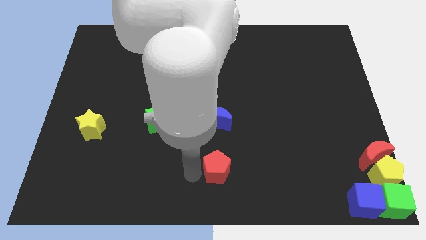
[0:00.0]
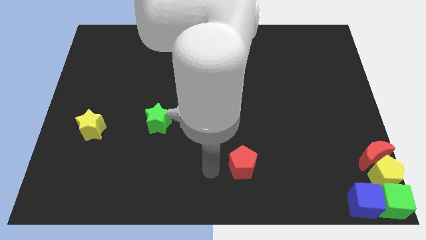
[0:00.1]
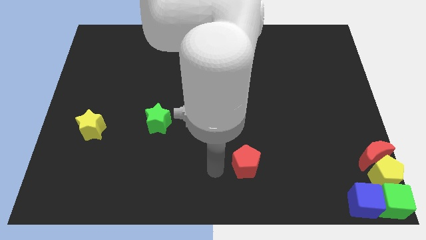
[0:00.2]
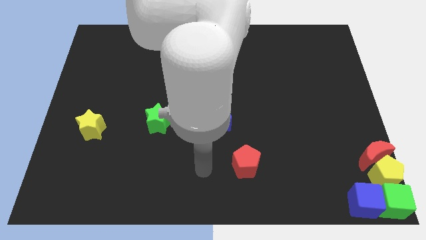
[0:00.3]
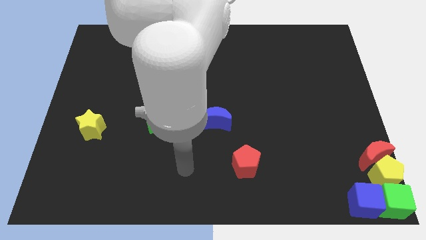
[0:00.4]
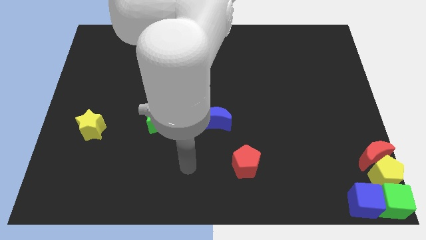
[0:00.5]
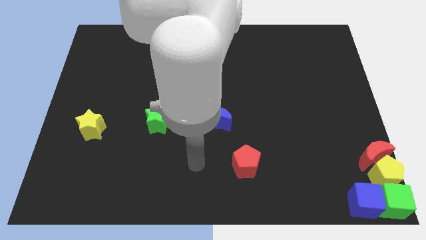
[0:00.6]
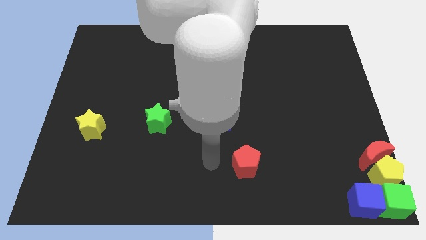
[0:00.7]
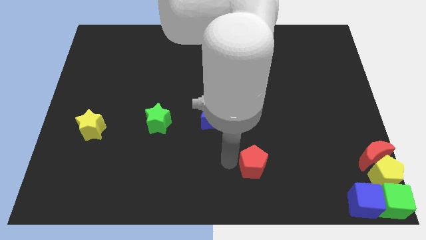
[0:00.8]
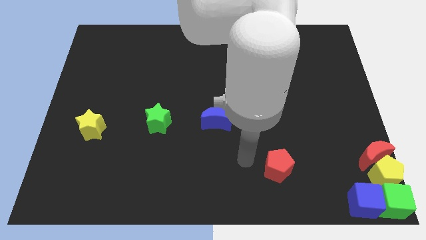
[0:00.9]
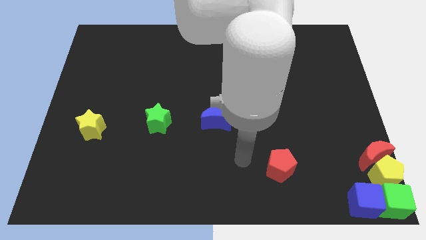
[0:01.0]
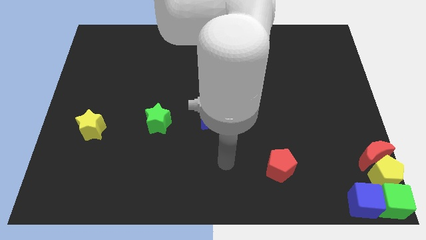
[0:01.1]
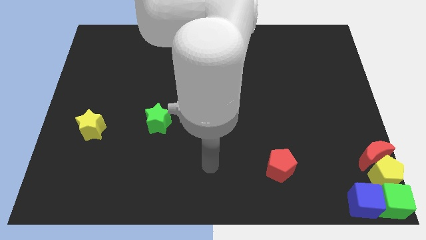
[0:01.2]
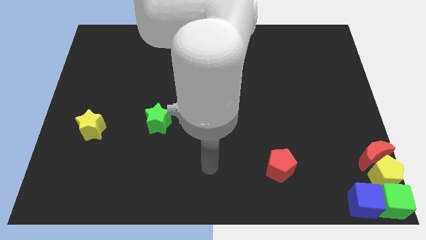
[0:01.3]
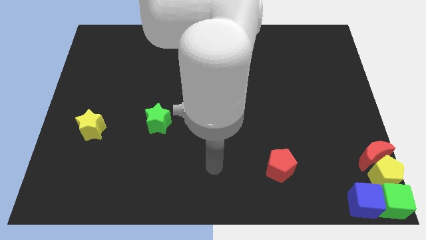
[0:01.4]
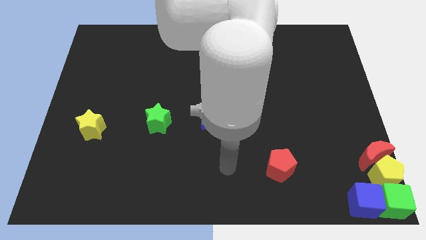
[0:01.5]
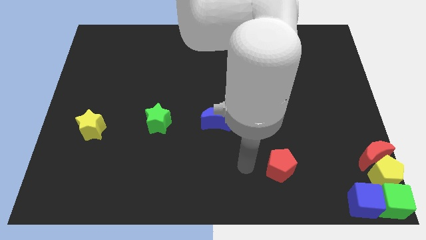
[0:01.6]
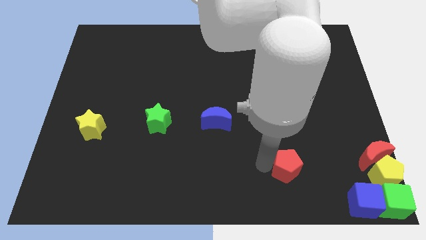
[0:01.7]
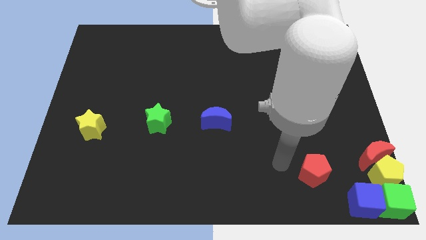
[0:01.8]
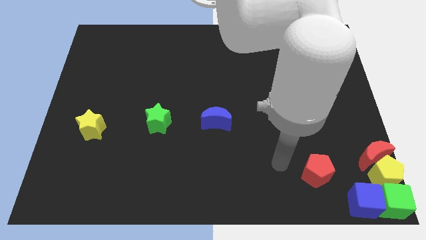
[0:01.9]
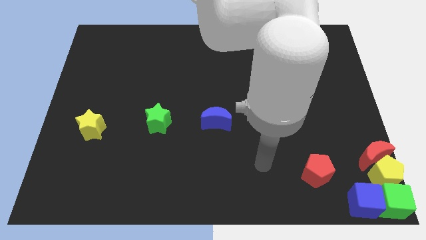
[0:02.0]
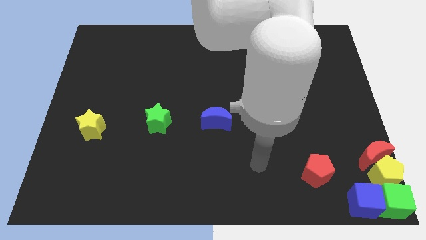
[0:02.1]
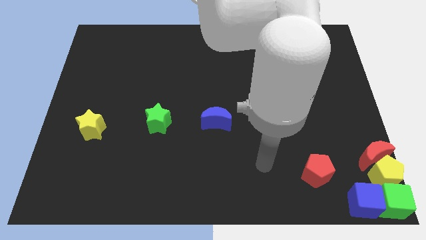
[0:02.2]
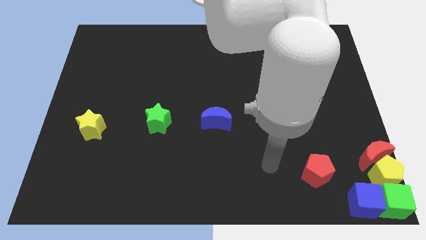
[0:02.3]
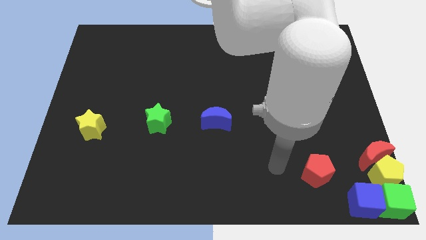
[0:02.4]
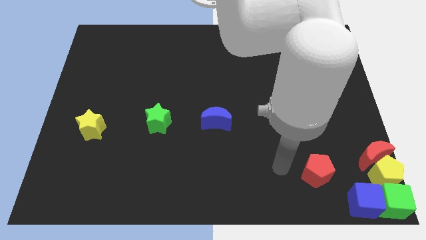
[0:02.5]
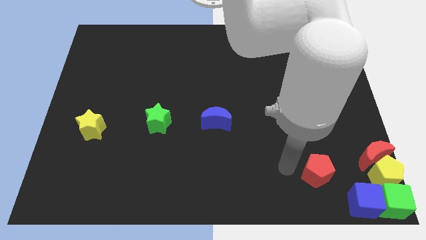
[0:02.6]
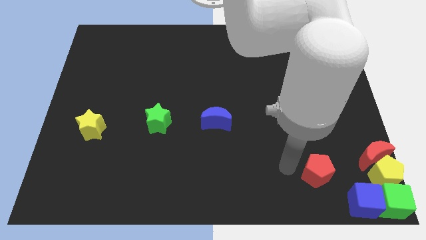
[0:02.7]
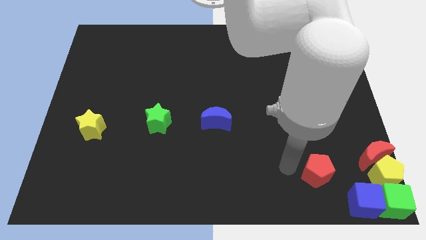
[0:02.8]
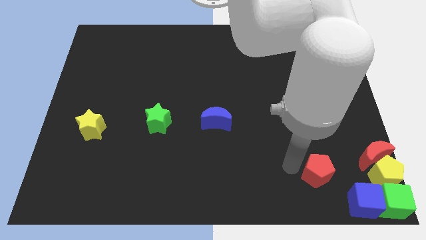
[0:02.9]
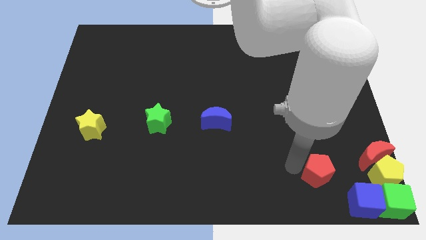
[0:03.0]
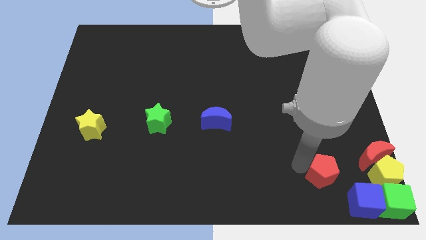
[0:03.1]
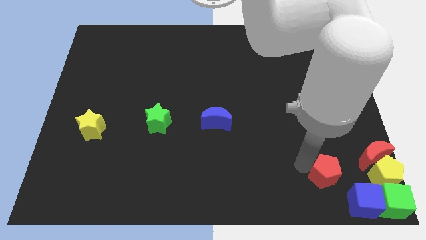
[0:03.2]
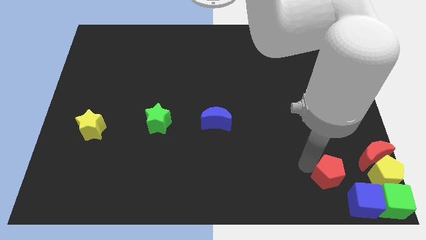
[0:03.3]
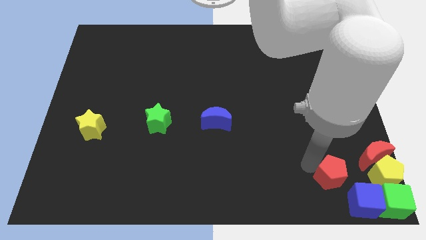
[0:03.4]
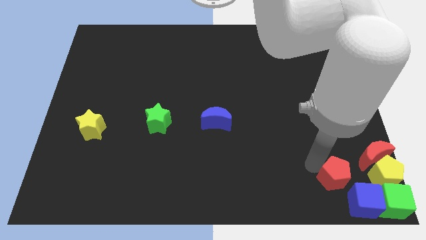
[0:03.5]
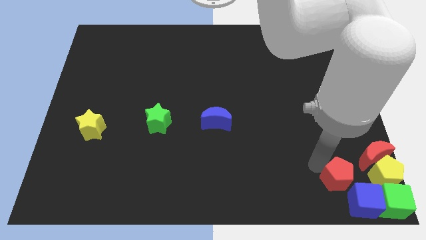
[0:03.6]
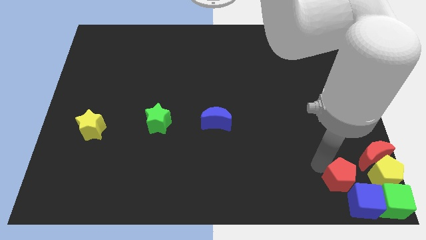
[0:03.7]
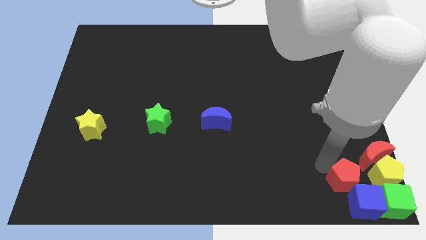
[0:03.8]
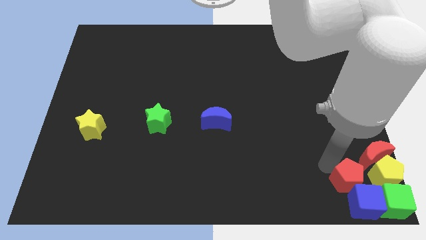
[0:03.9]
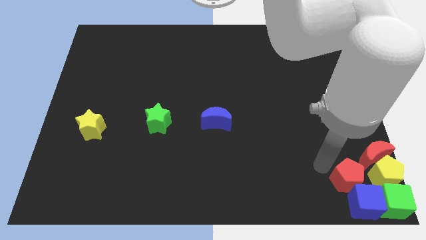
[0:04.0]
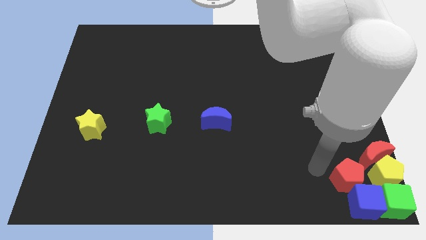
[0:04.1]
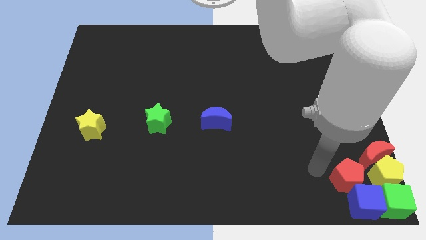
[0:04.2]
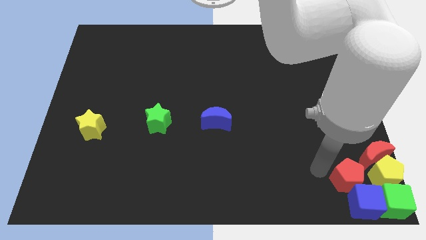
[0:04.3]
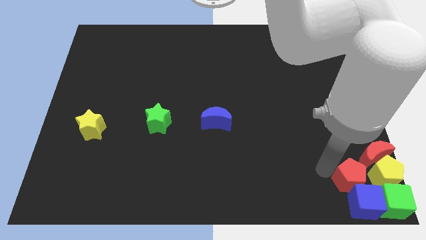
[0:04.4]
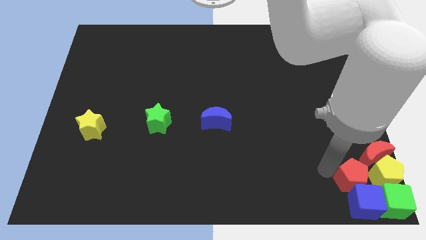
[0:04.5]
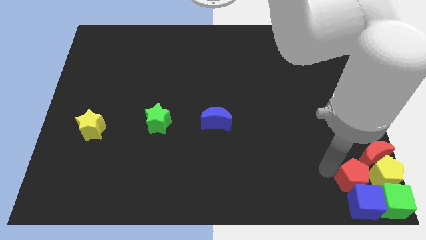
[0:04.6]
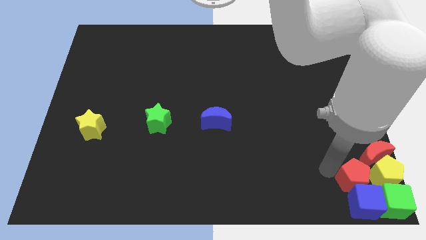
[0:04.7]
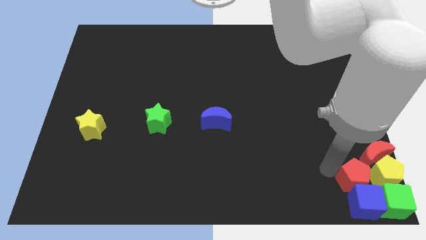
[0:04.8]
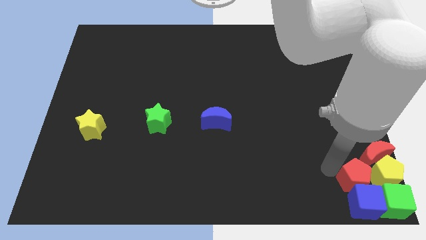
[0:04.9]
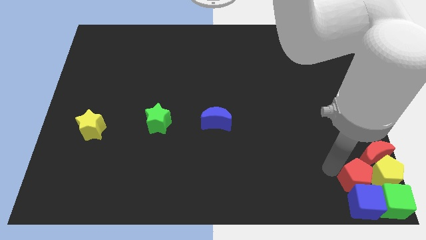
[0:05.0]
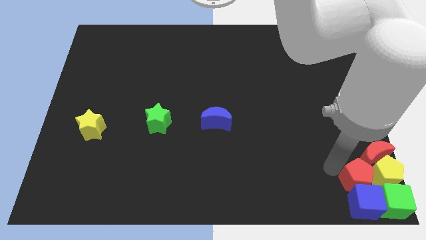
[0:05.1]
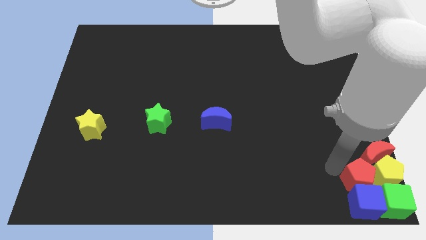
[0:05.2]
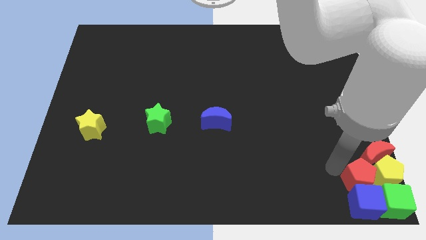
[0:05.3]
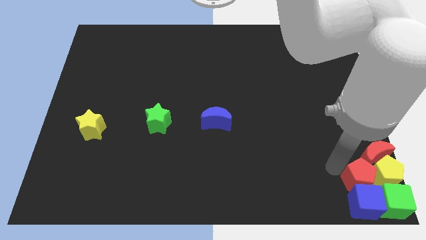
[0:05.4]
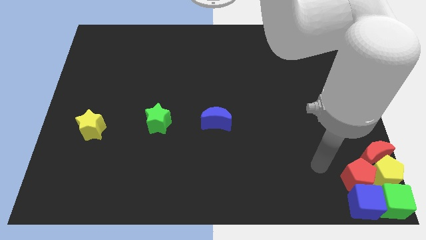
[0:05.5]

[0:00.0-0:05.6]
move the red pentagon left to yellow pentagon

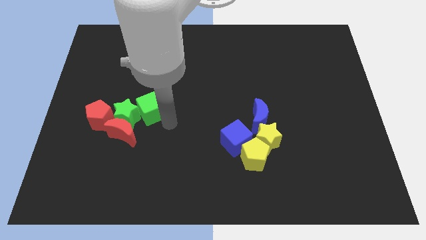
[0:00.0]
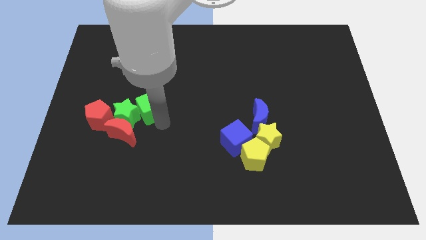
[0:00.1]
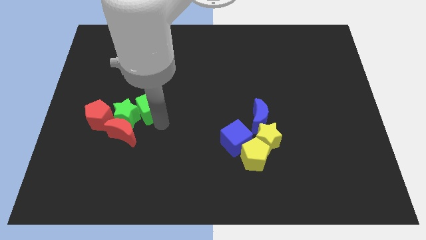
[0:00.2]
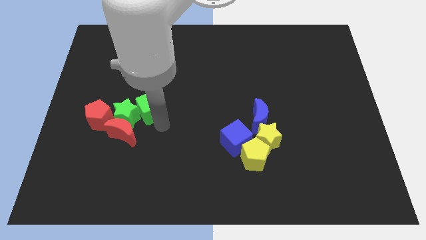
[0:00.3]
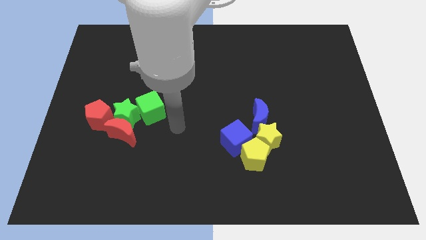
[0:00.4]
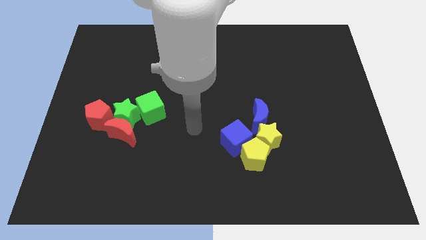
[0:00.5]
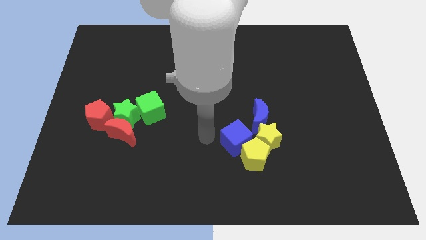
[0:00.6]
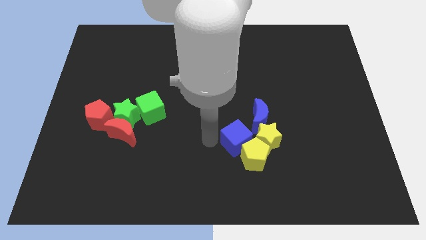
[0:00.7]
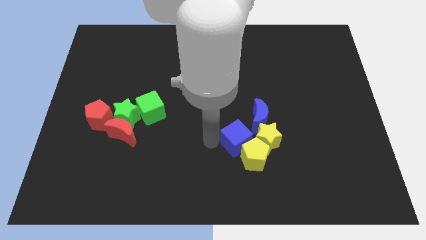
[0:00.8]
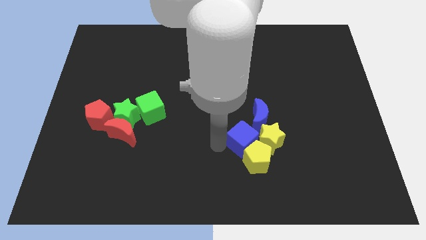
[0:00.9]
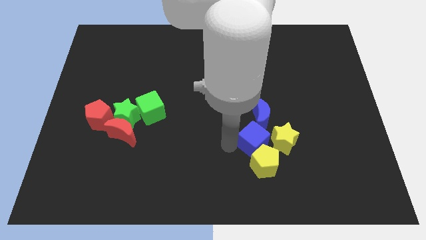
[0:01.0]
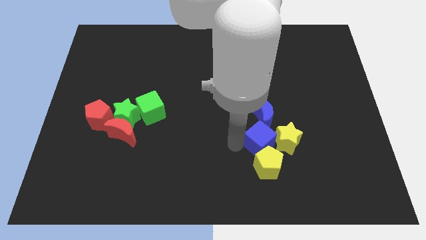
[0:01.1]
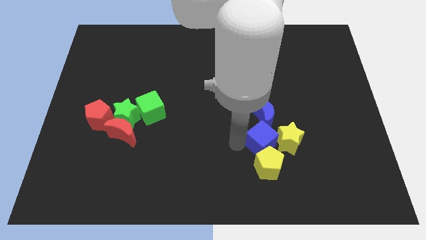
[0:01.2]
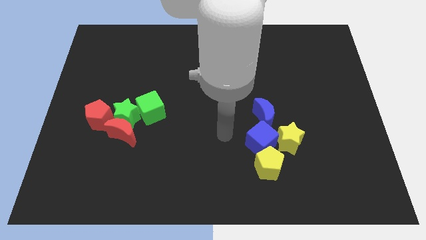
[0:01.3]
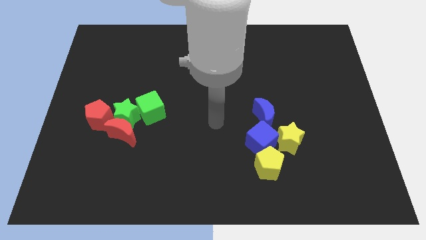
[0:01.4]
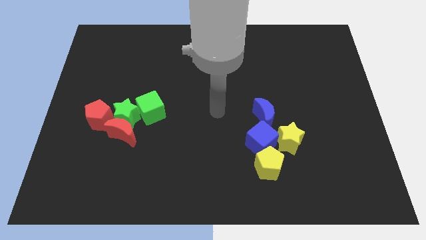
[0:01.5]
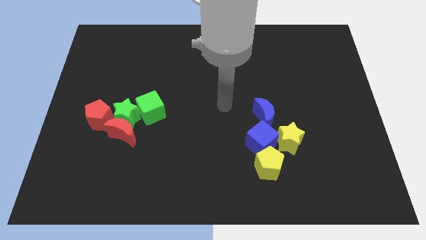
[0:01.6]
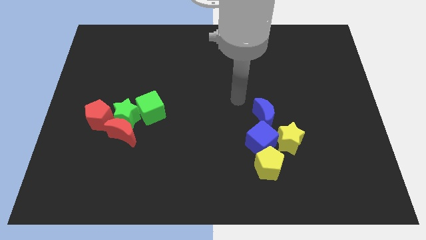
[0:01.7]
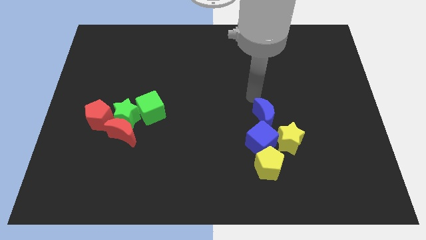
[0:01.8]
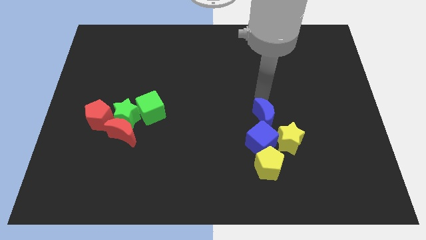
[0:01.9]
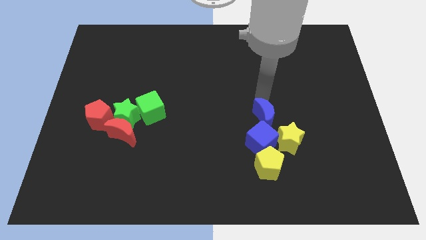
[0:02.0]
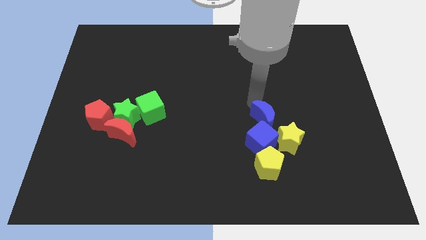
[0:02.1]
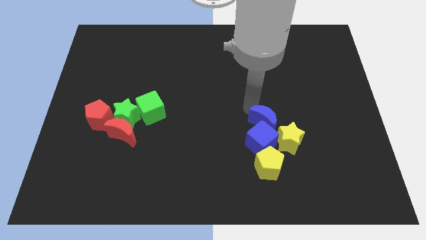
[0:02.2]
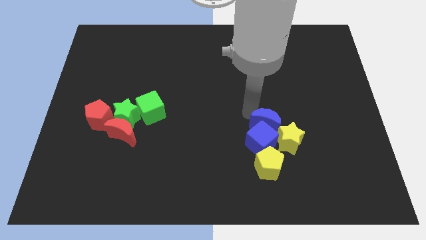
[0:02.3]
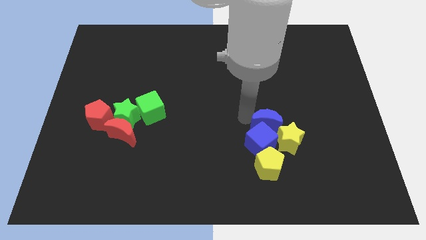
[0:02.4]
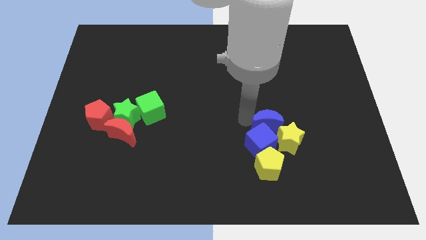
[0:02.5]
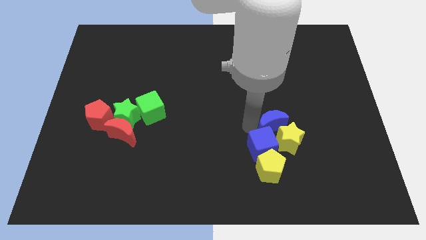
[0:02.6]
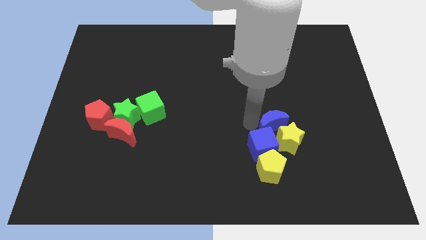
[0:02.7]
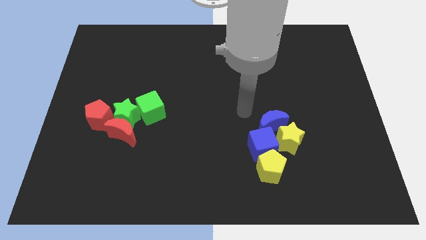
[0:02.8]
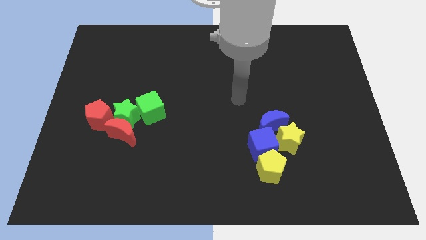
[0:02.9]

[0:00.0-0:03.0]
push the blue and yellow blocks together slightly to the right

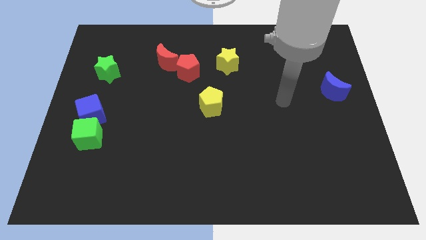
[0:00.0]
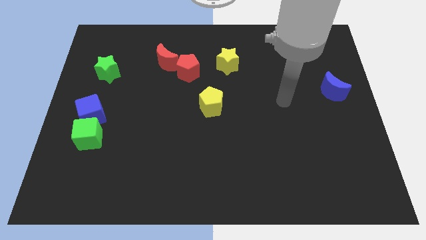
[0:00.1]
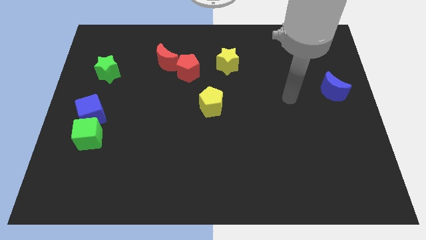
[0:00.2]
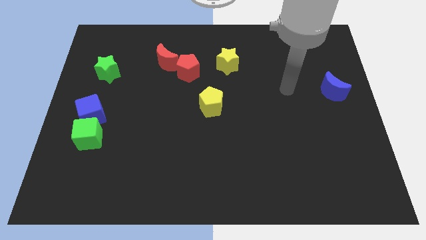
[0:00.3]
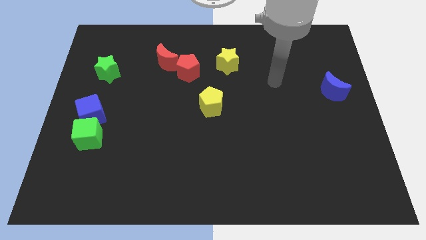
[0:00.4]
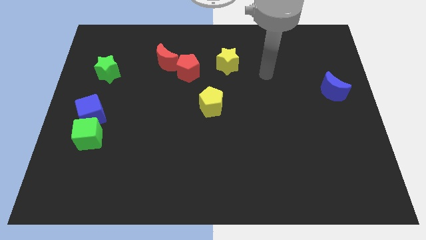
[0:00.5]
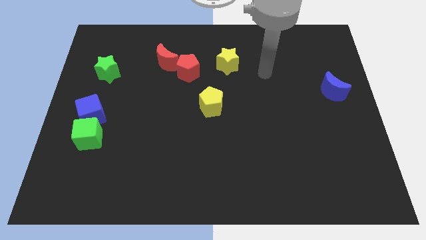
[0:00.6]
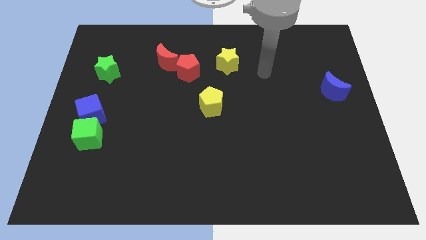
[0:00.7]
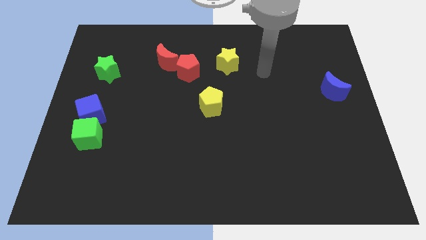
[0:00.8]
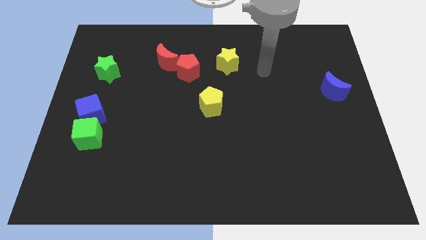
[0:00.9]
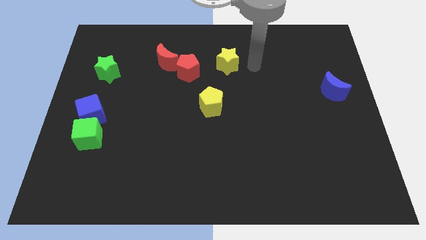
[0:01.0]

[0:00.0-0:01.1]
slide your arm to the right of yellow star
